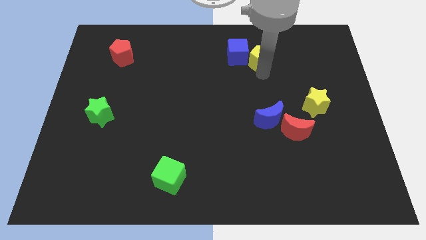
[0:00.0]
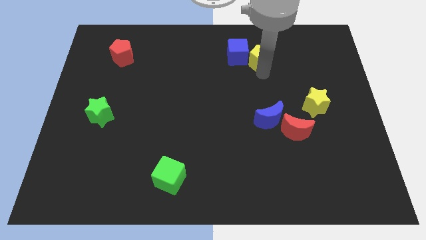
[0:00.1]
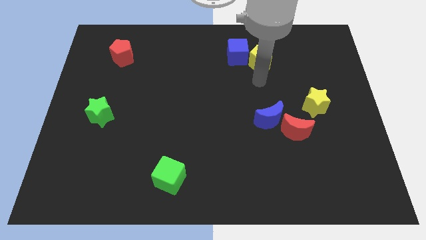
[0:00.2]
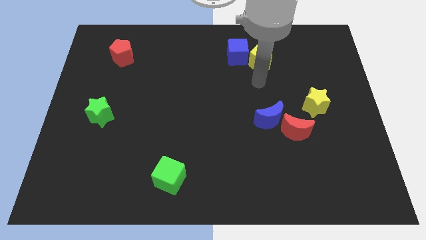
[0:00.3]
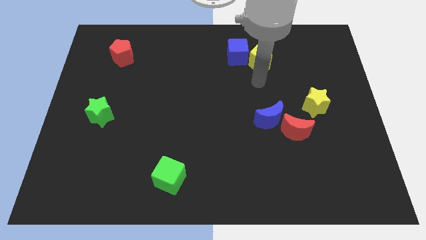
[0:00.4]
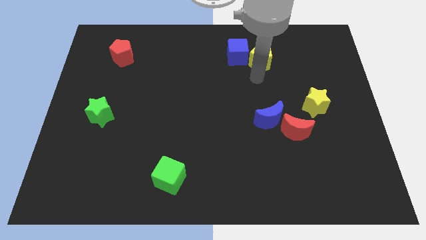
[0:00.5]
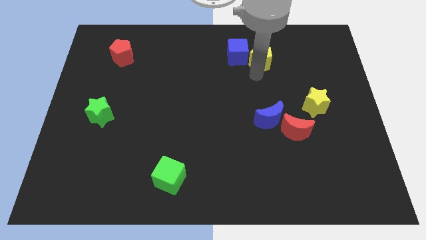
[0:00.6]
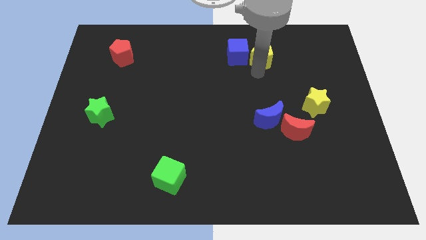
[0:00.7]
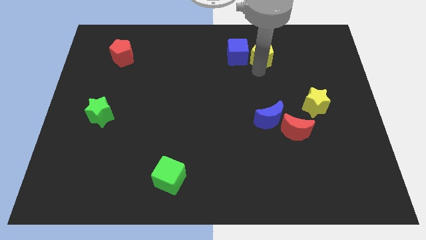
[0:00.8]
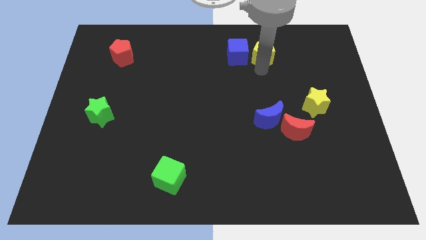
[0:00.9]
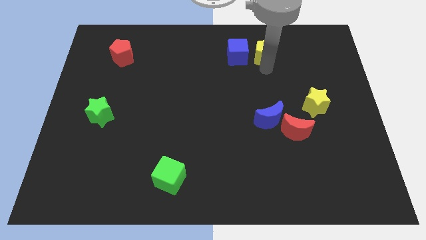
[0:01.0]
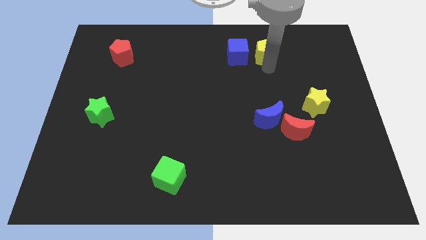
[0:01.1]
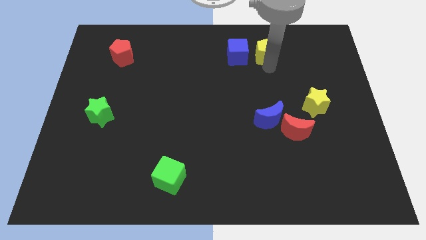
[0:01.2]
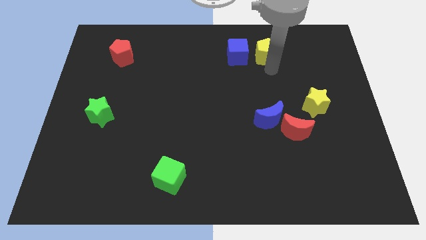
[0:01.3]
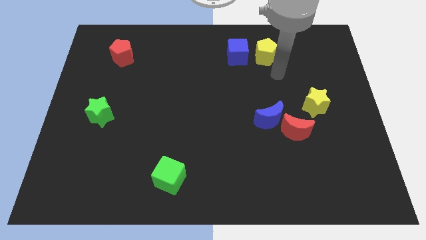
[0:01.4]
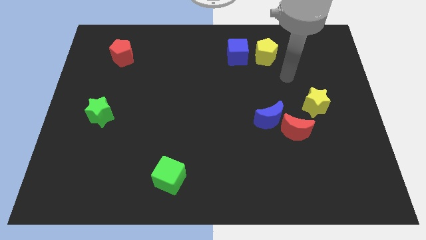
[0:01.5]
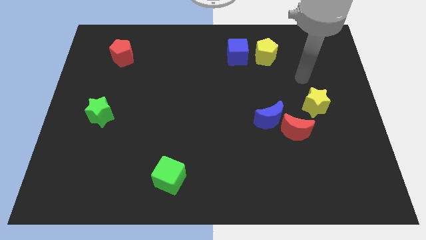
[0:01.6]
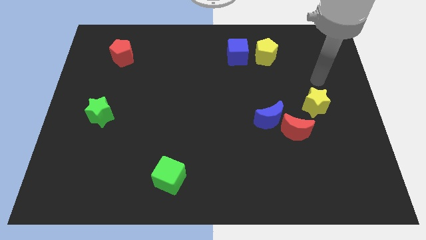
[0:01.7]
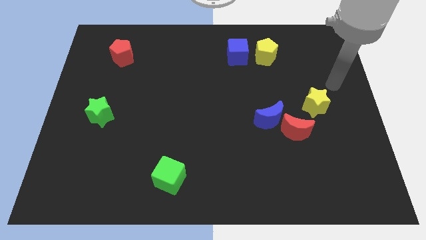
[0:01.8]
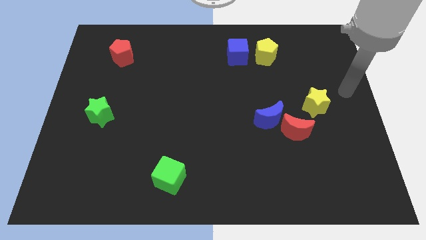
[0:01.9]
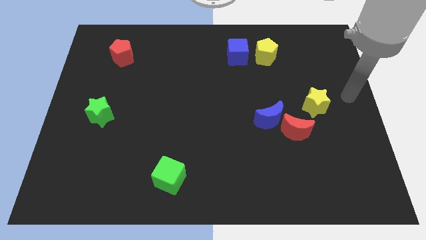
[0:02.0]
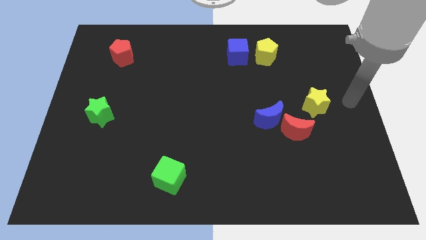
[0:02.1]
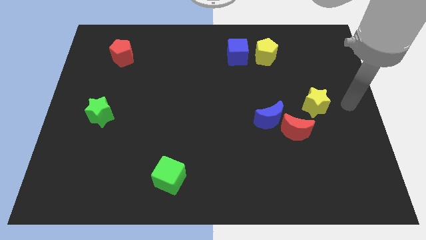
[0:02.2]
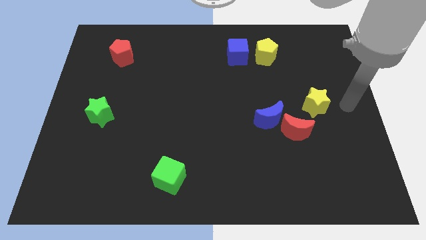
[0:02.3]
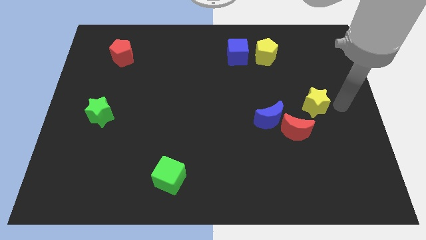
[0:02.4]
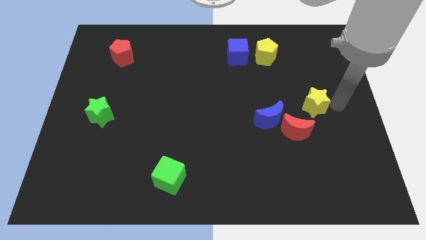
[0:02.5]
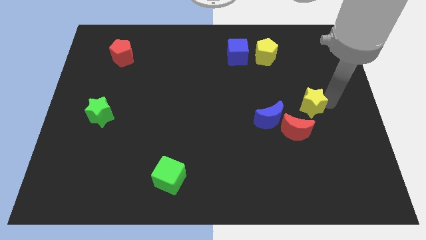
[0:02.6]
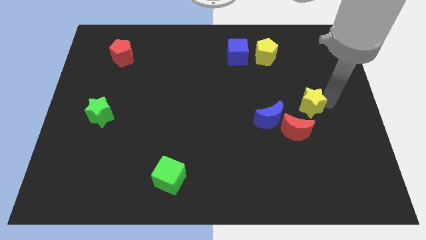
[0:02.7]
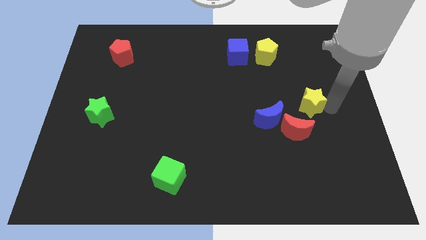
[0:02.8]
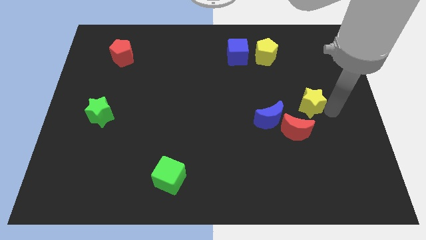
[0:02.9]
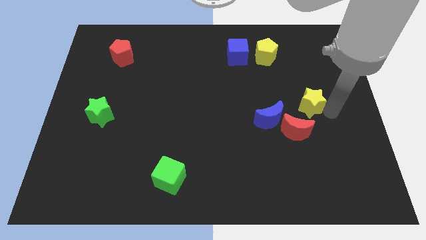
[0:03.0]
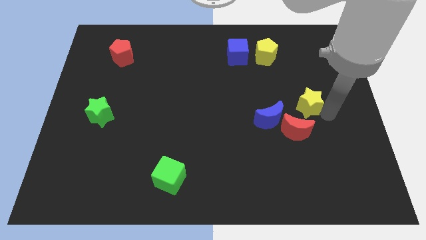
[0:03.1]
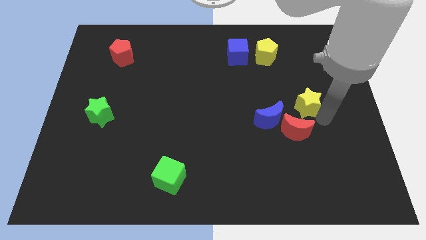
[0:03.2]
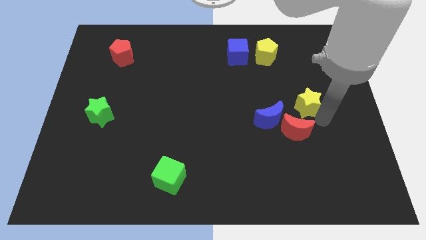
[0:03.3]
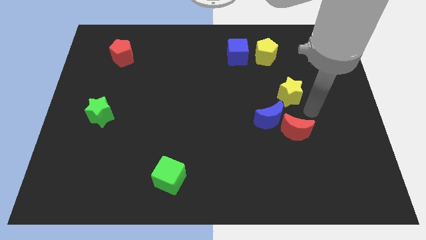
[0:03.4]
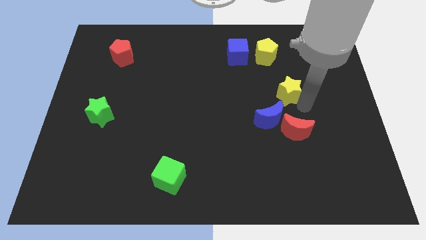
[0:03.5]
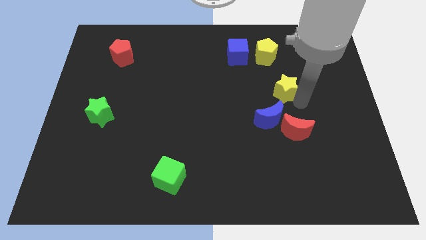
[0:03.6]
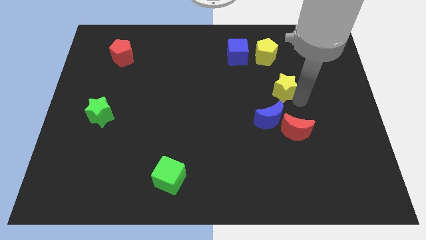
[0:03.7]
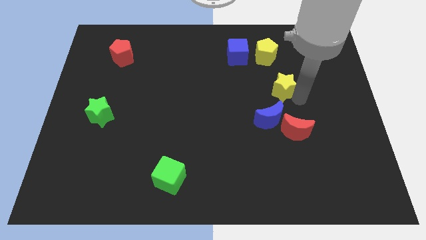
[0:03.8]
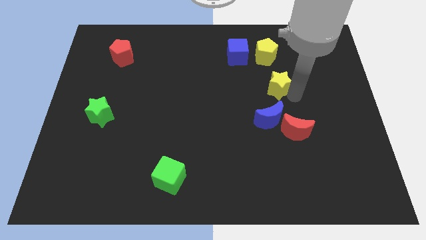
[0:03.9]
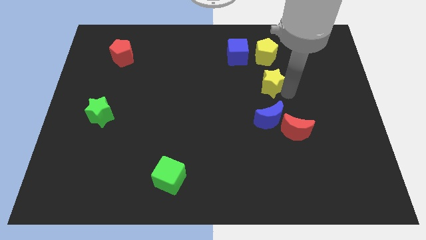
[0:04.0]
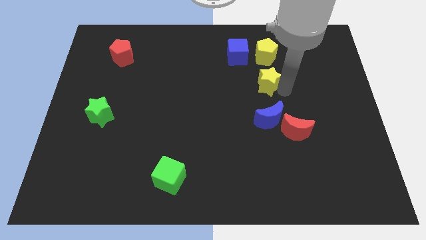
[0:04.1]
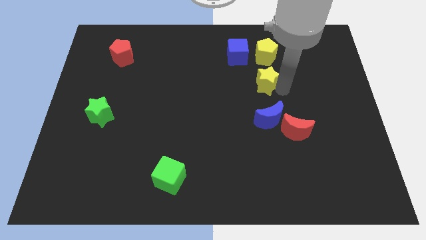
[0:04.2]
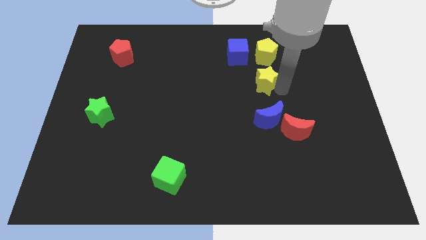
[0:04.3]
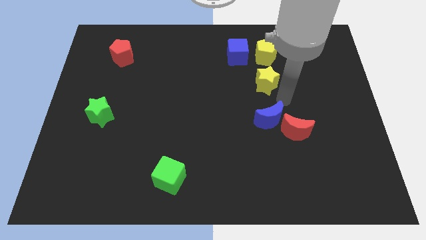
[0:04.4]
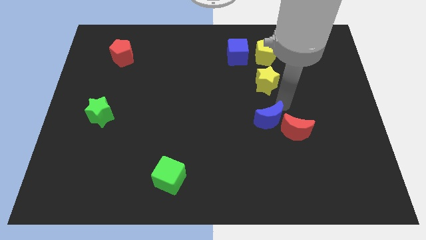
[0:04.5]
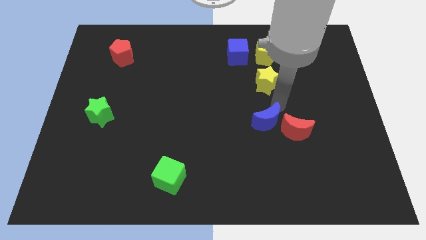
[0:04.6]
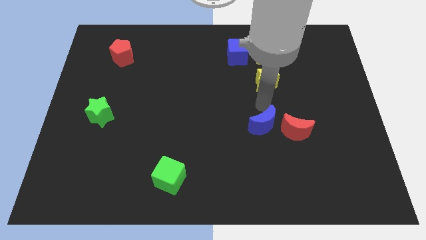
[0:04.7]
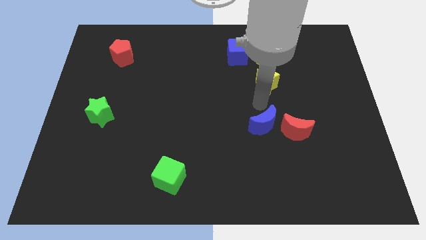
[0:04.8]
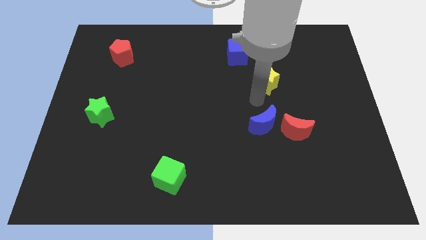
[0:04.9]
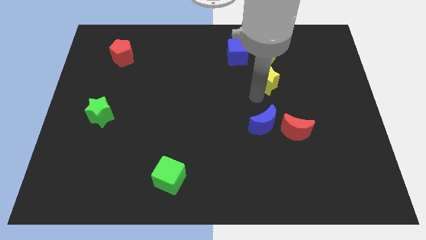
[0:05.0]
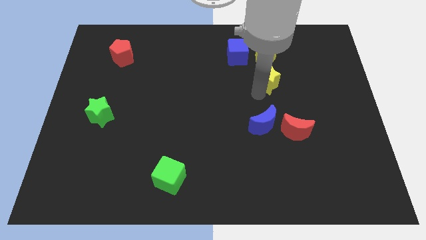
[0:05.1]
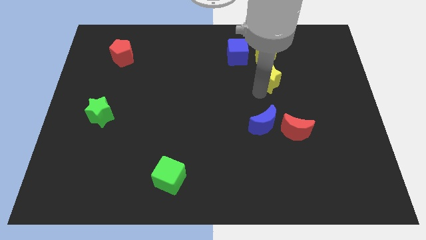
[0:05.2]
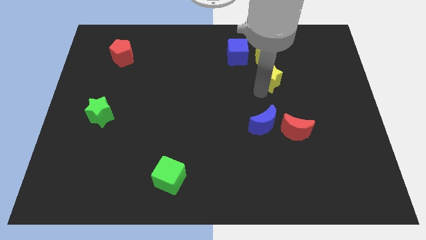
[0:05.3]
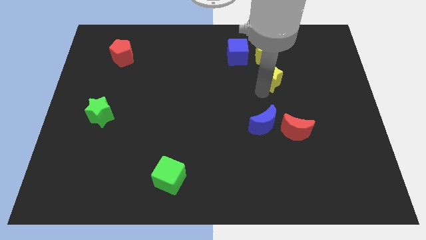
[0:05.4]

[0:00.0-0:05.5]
slide the yellow star vertically below the yellow pentagon

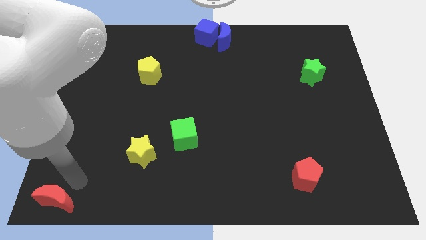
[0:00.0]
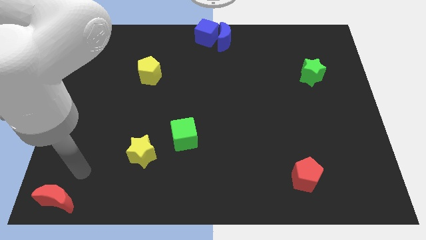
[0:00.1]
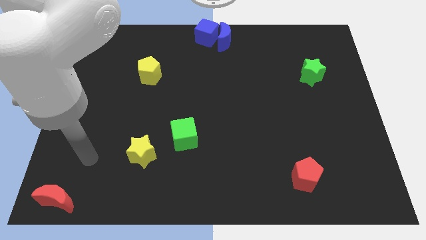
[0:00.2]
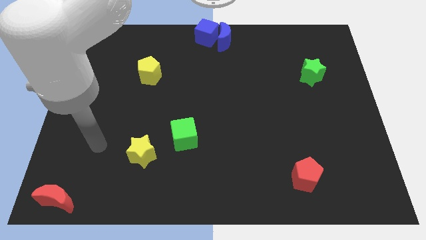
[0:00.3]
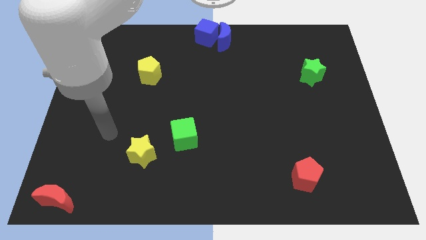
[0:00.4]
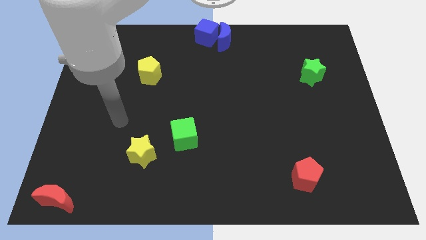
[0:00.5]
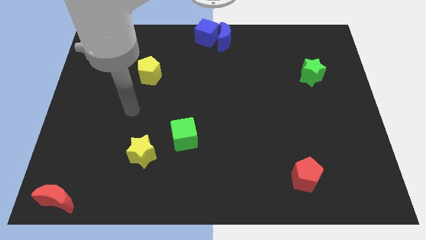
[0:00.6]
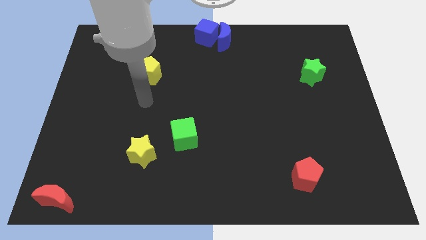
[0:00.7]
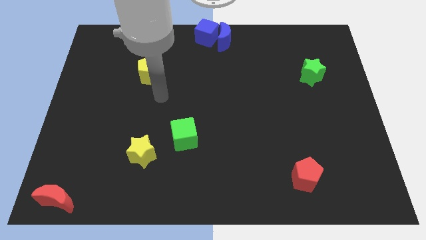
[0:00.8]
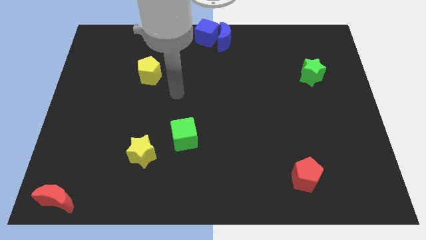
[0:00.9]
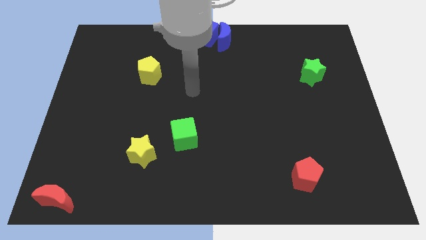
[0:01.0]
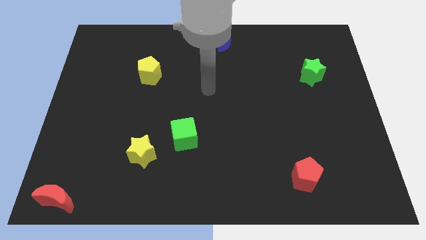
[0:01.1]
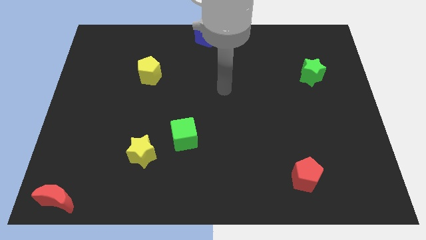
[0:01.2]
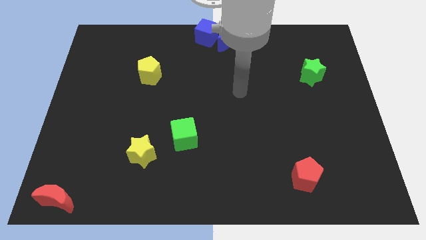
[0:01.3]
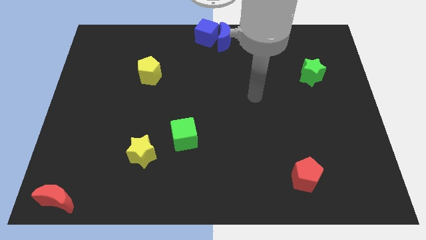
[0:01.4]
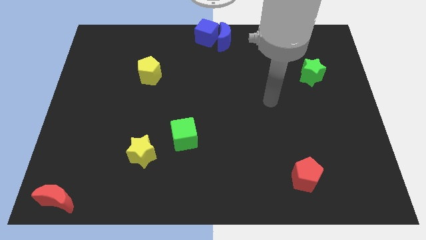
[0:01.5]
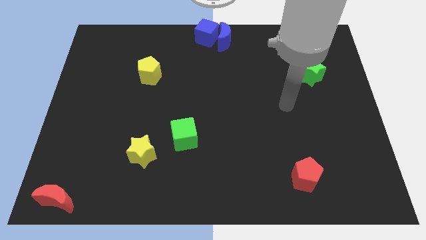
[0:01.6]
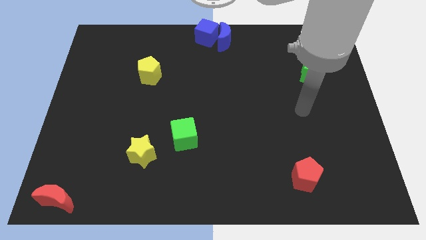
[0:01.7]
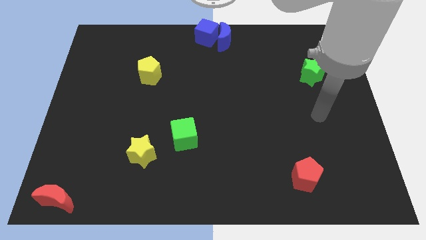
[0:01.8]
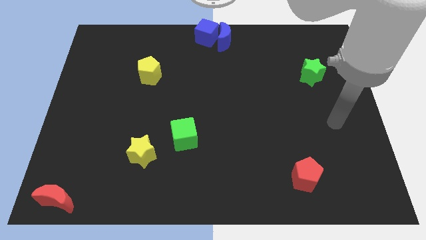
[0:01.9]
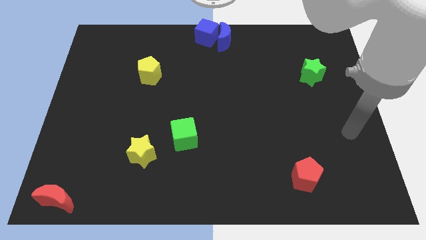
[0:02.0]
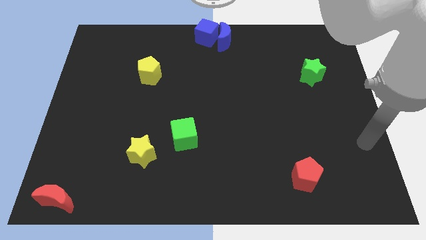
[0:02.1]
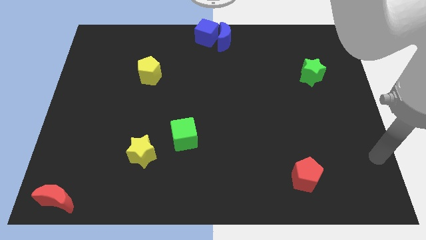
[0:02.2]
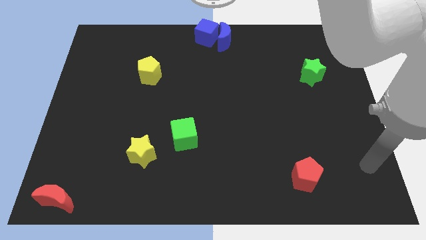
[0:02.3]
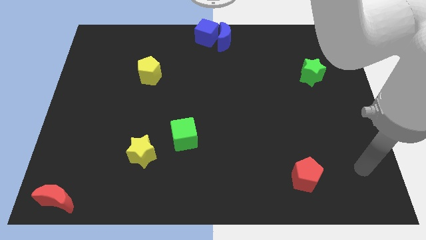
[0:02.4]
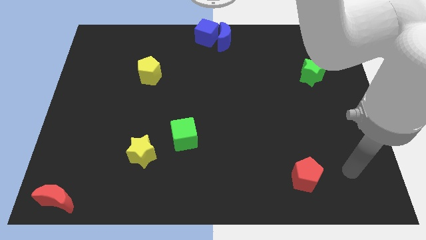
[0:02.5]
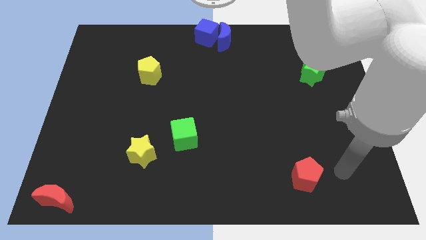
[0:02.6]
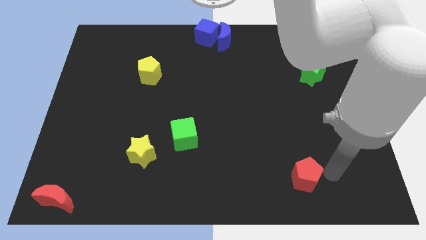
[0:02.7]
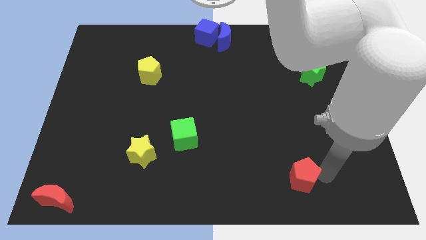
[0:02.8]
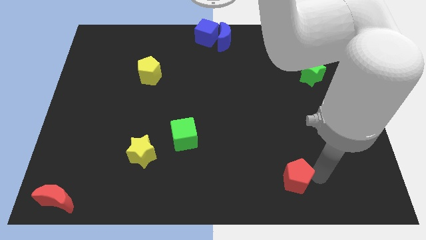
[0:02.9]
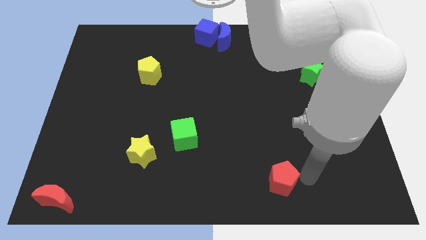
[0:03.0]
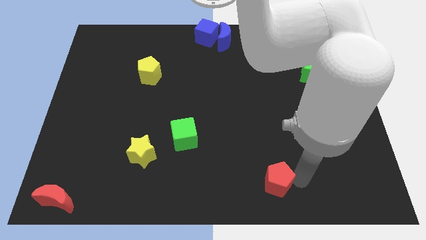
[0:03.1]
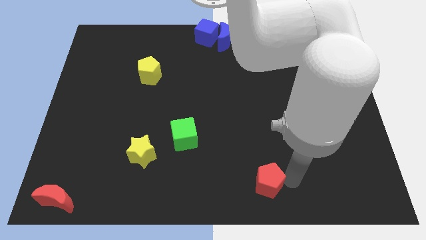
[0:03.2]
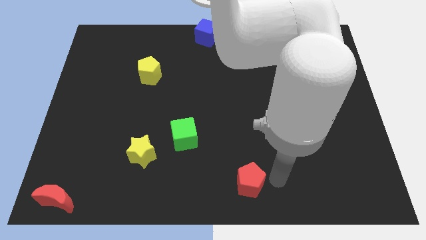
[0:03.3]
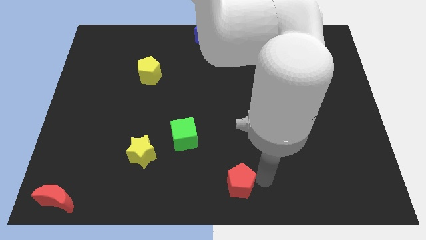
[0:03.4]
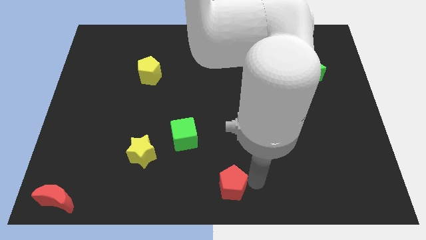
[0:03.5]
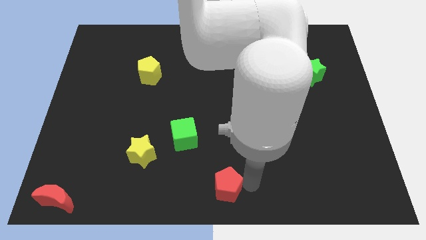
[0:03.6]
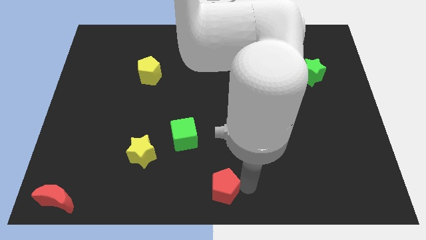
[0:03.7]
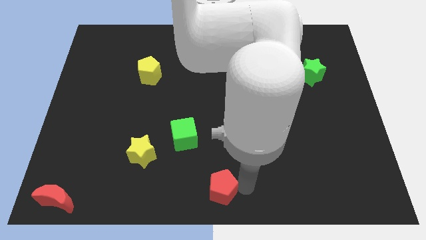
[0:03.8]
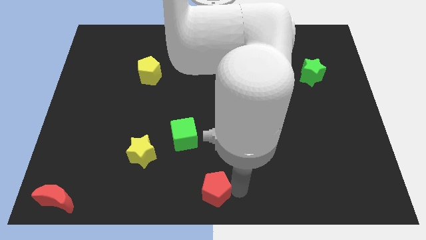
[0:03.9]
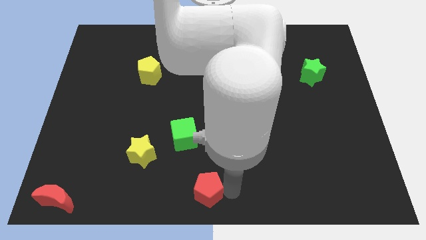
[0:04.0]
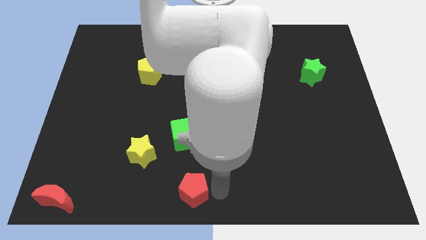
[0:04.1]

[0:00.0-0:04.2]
place the red pentagon at the bottom center of the board
